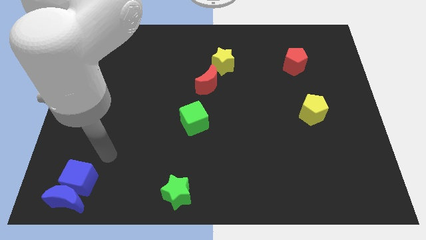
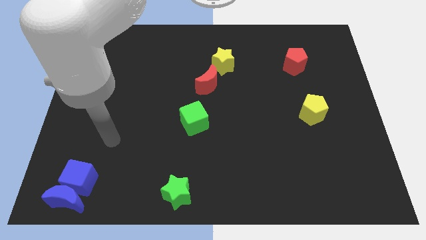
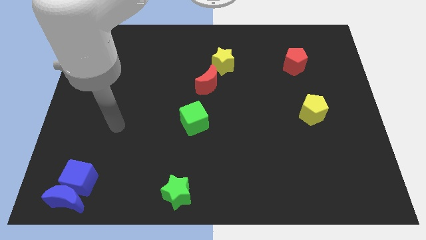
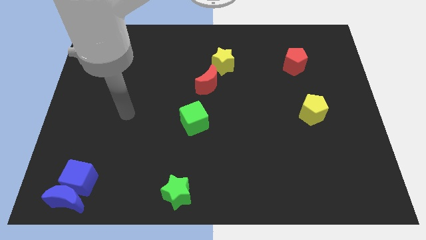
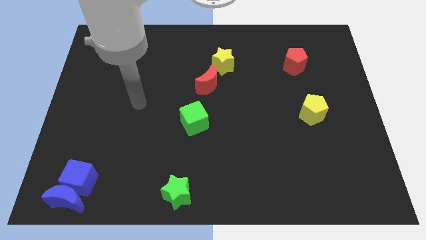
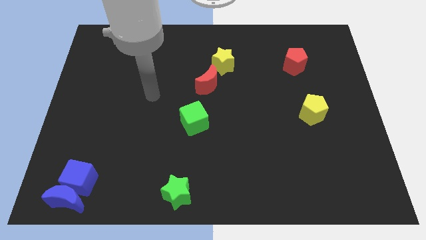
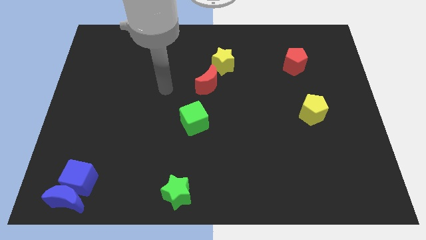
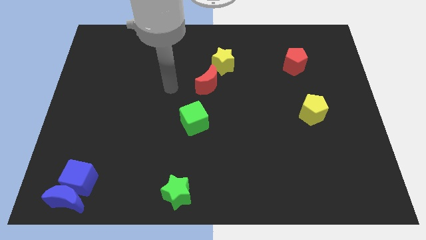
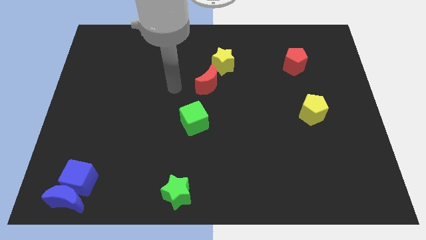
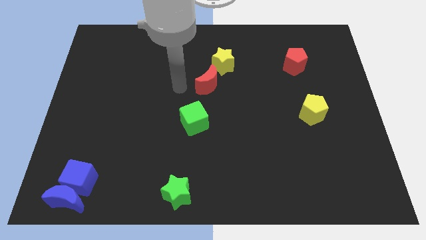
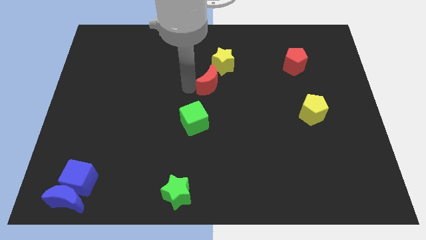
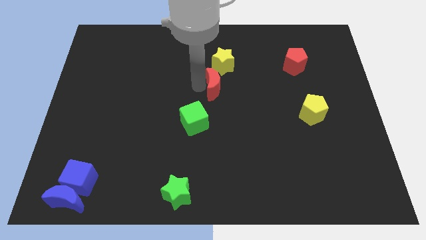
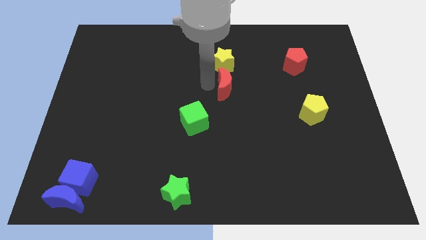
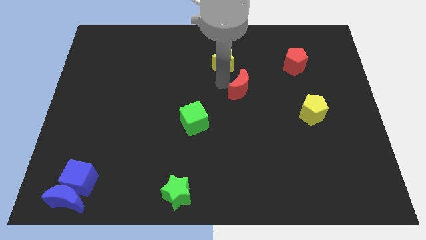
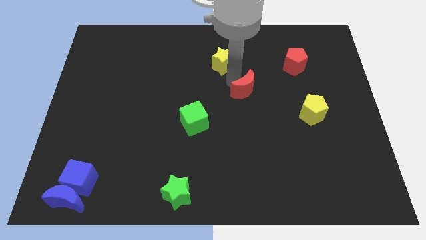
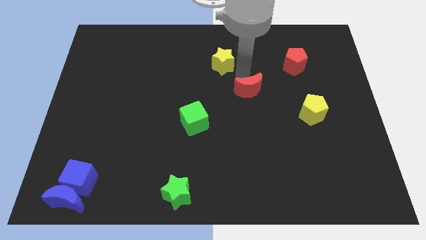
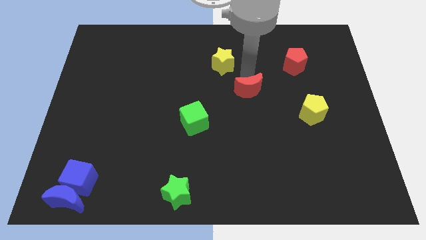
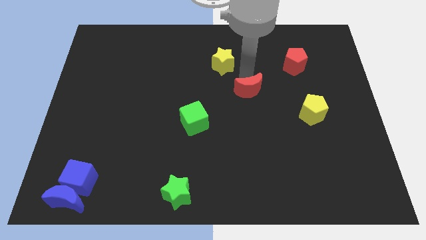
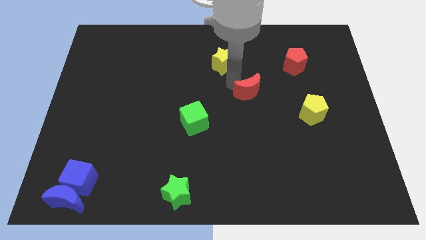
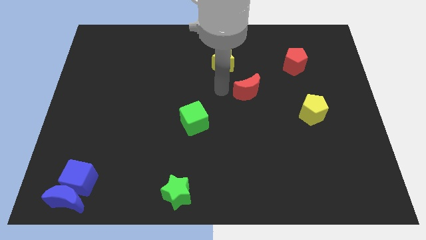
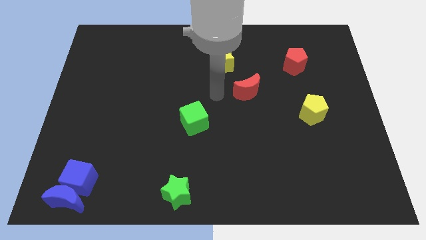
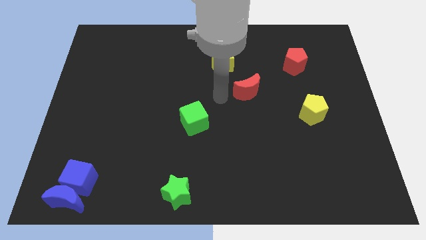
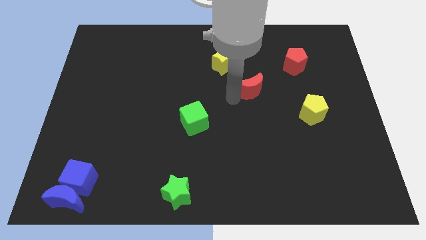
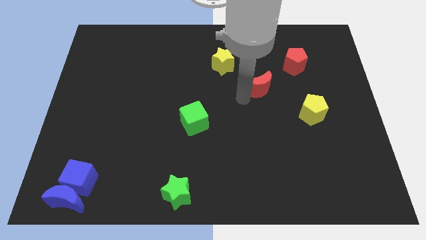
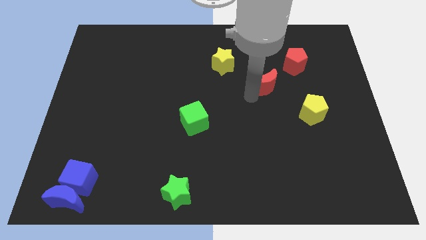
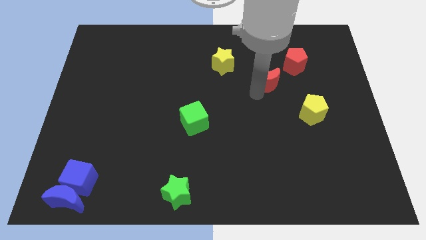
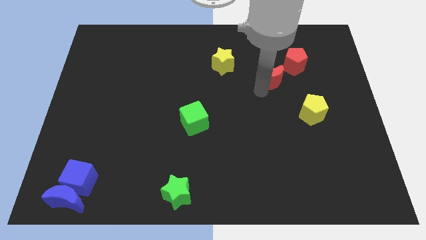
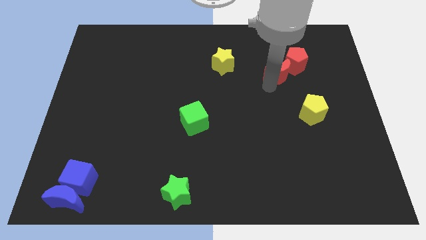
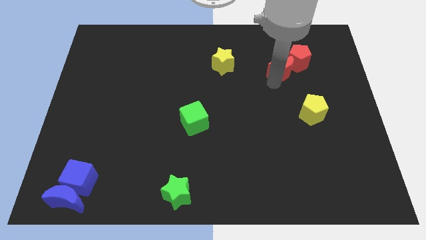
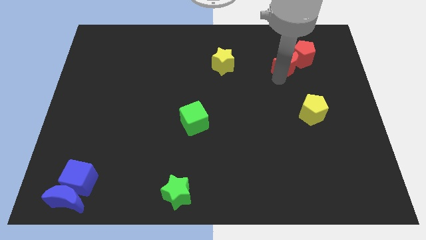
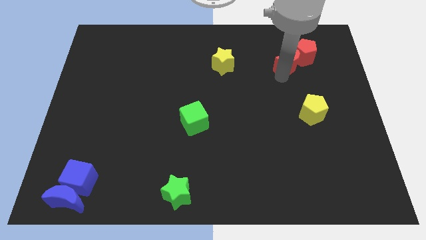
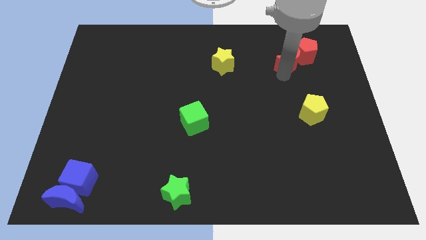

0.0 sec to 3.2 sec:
push the red moon into the red pentagon

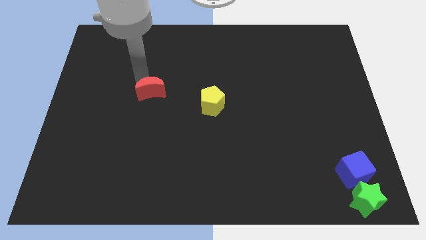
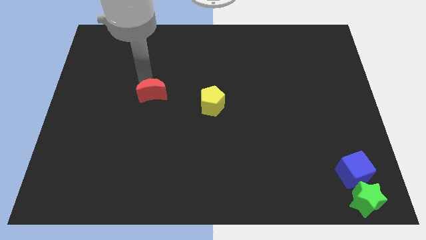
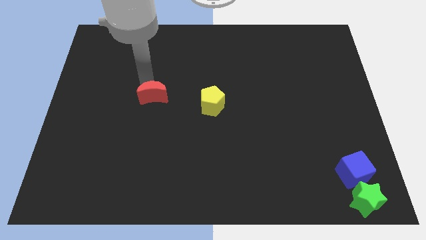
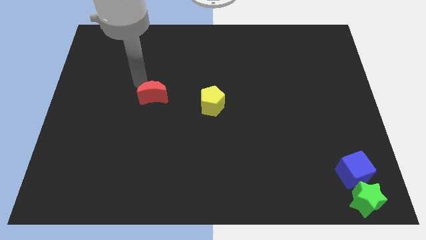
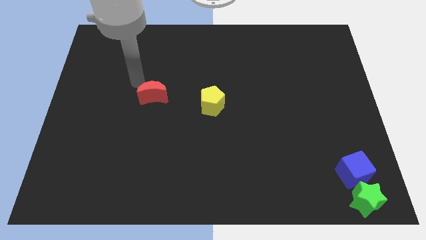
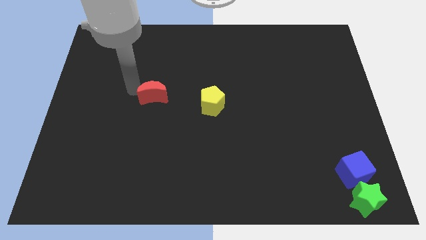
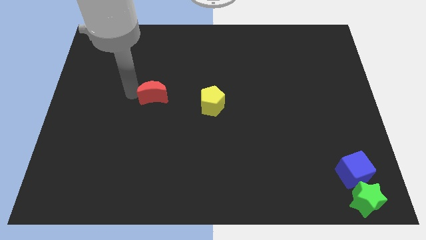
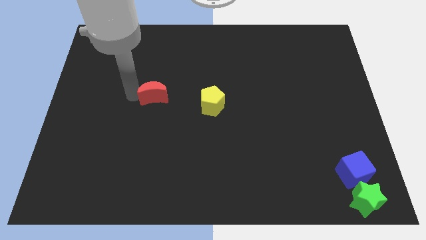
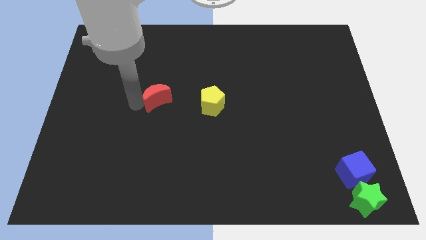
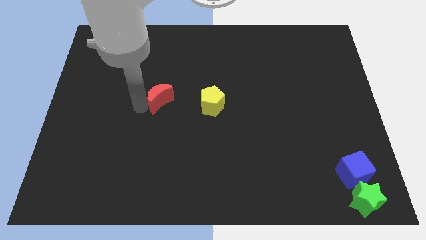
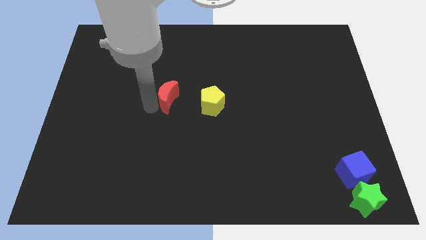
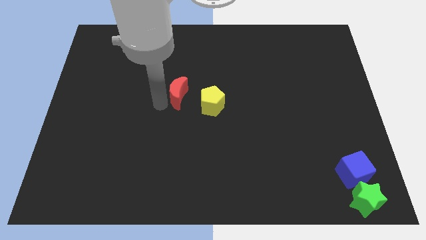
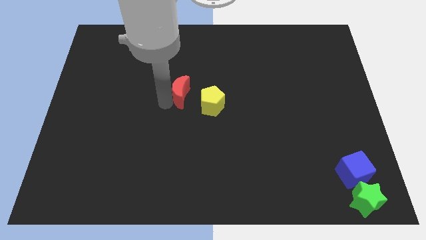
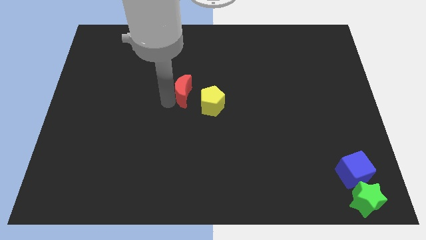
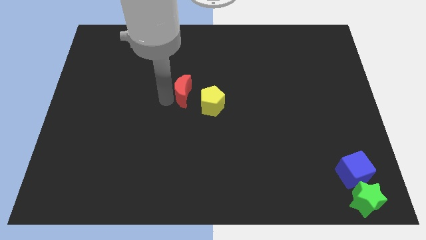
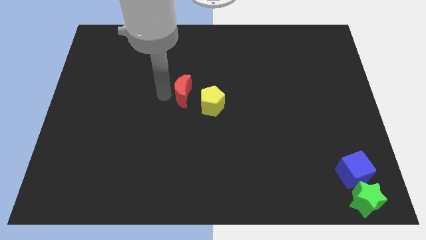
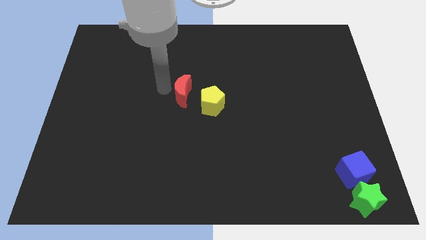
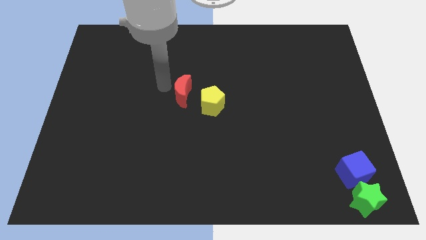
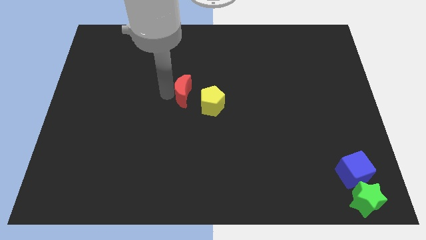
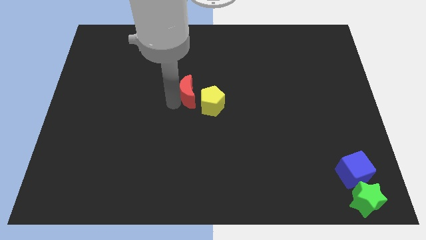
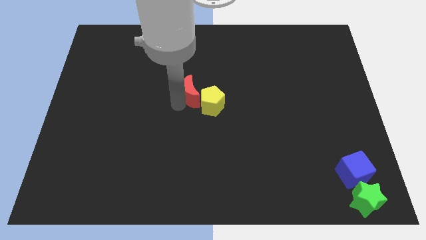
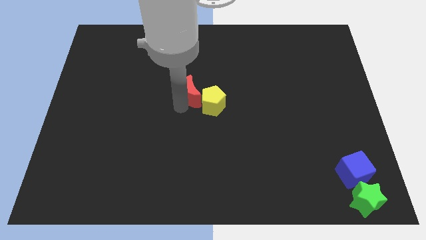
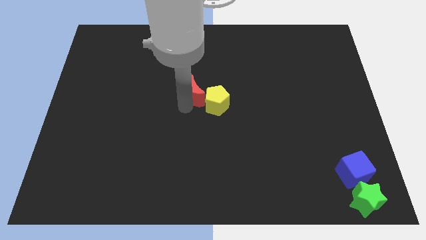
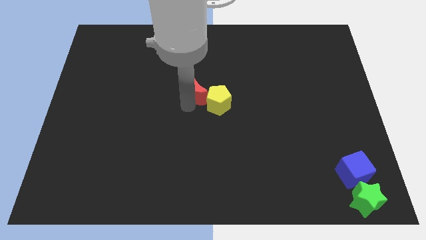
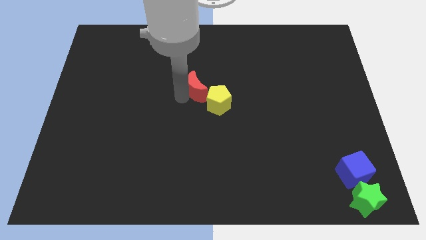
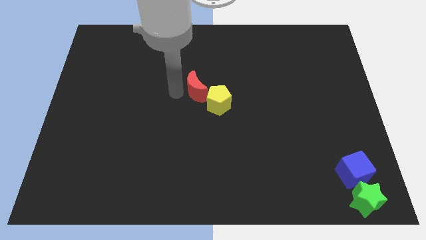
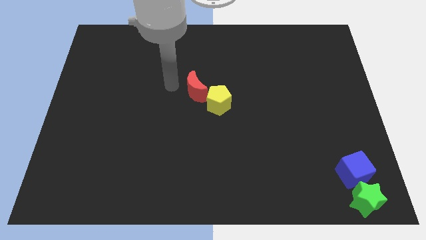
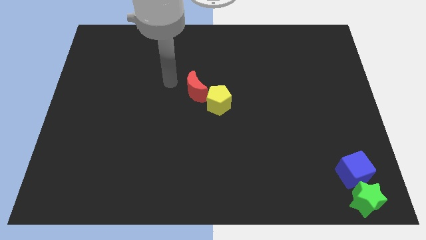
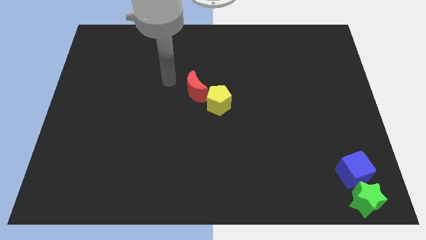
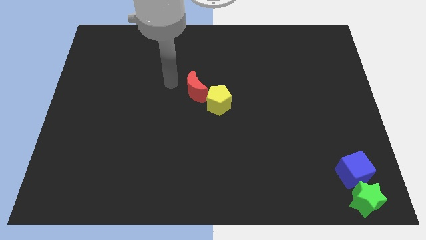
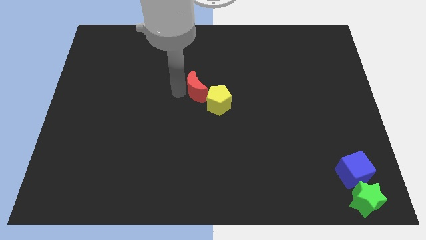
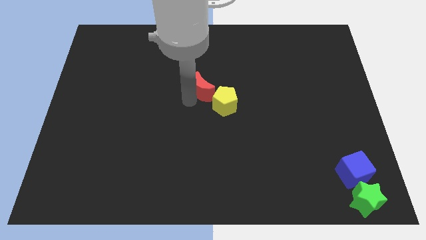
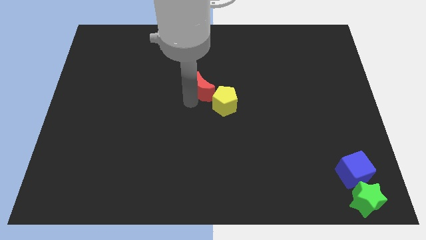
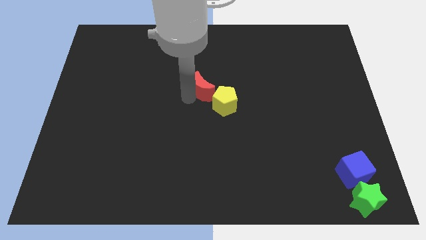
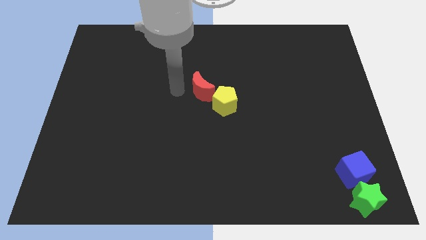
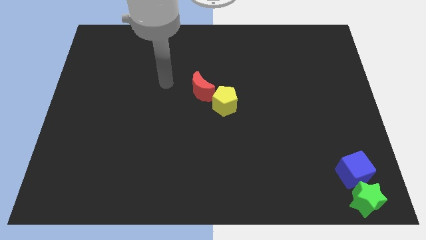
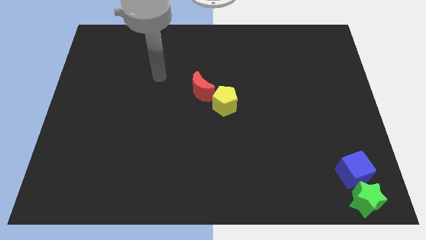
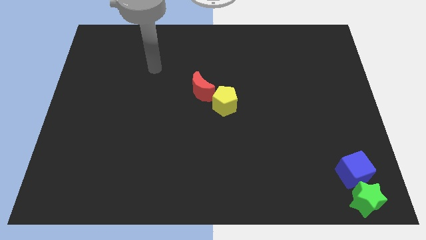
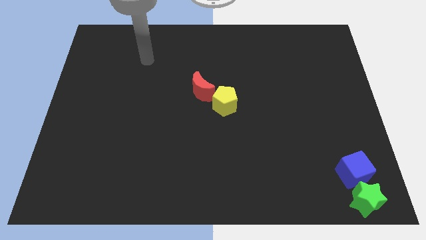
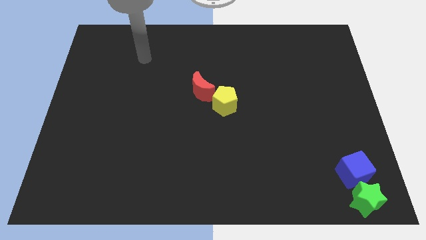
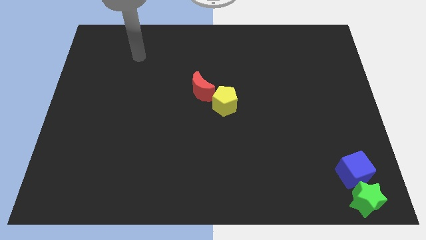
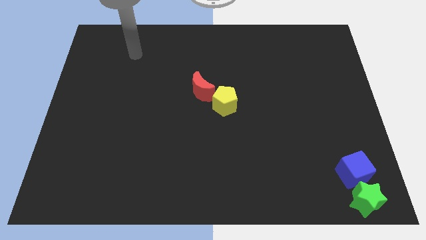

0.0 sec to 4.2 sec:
move red crescent into the yellow pentagon

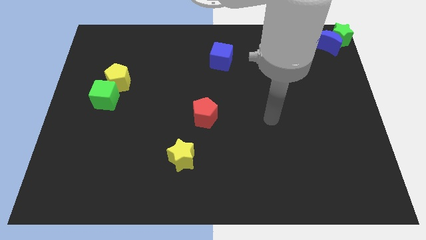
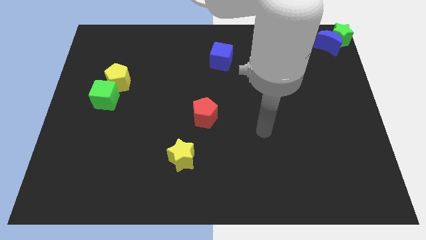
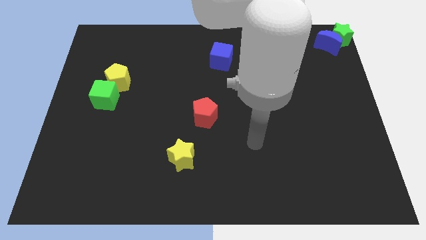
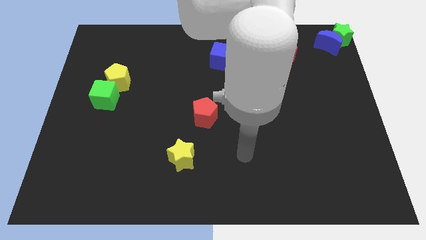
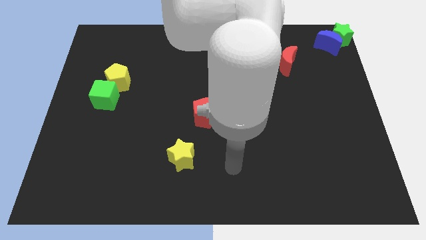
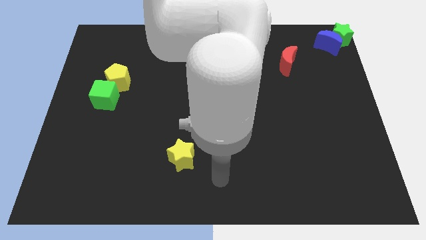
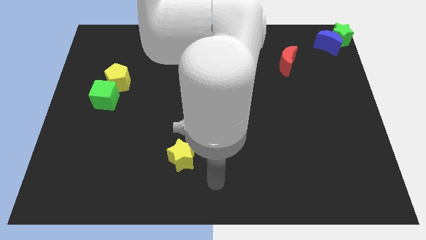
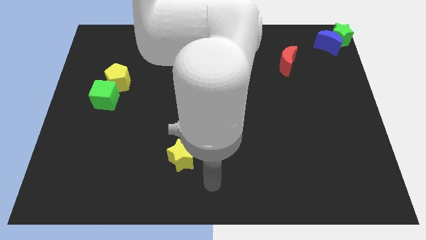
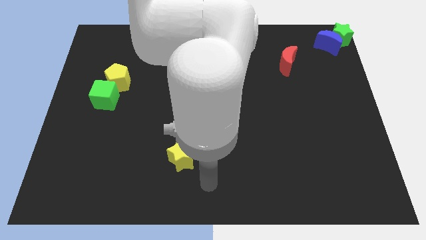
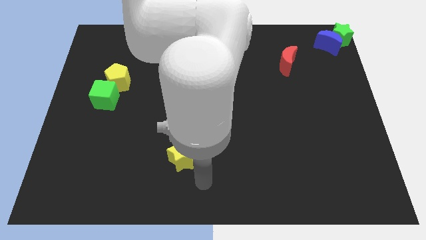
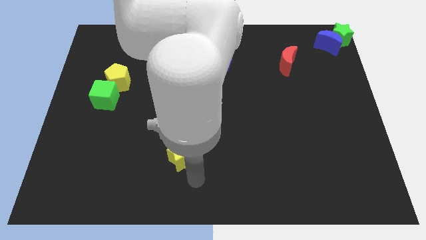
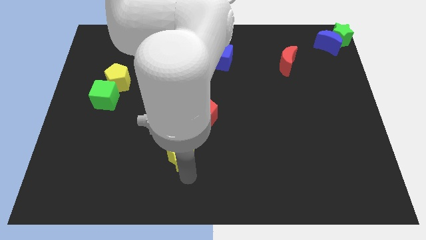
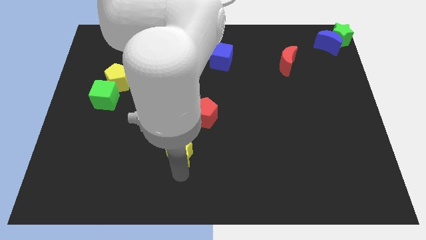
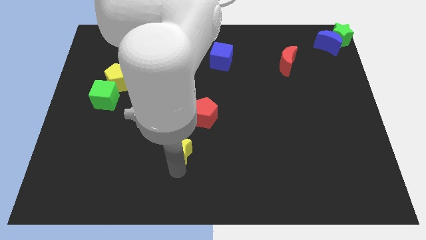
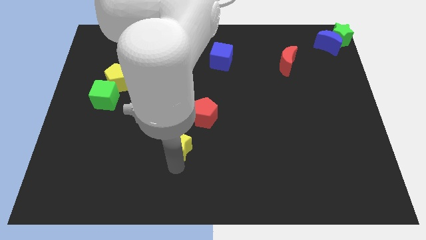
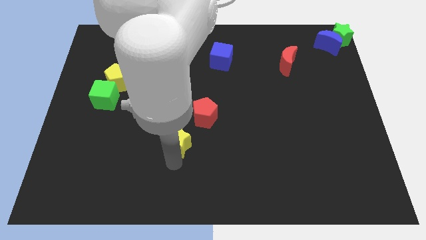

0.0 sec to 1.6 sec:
move the arm to the bottom of the yellow star
